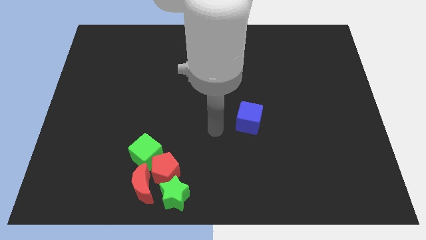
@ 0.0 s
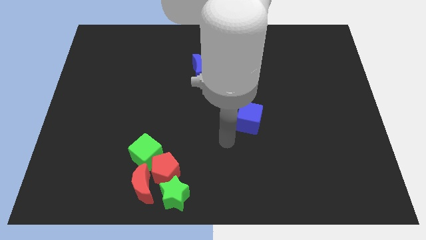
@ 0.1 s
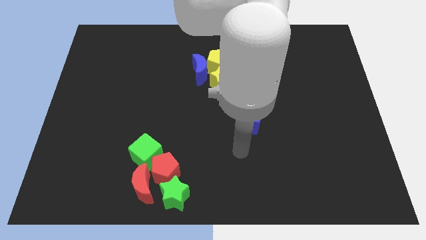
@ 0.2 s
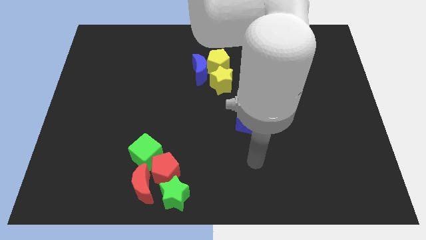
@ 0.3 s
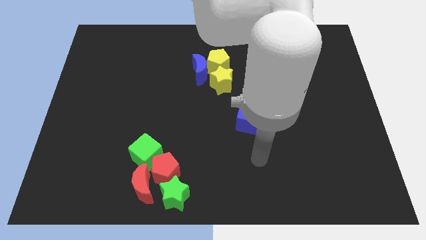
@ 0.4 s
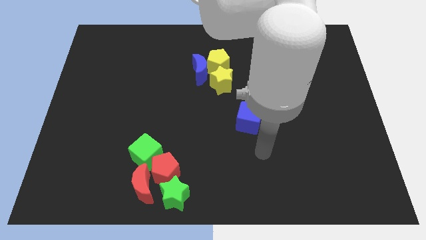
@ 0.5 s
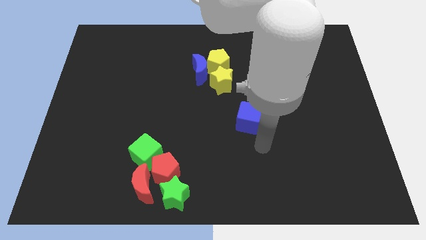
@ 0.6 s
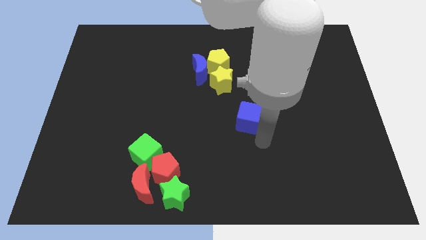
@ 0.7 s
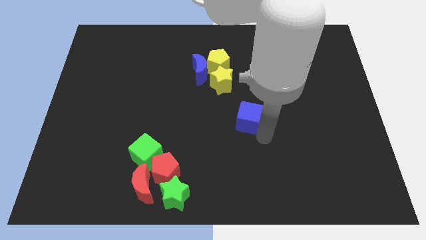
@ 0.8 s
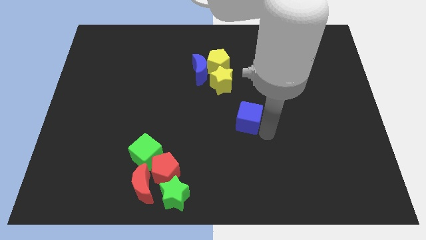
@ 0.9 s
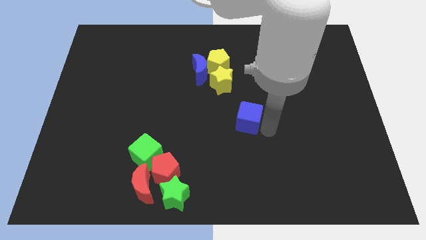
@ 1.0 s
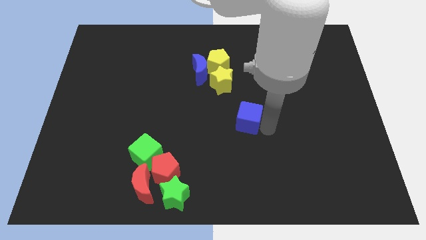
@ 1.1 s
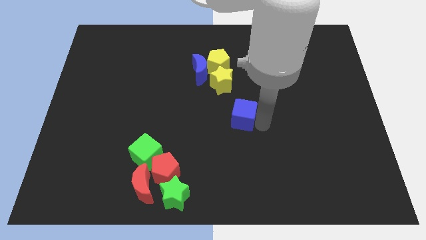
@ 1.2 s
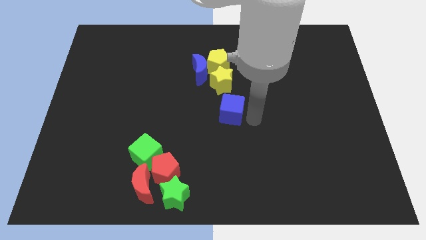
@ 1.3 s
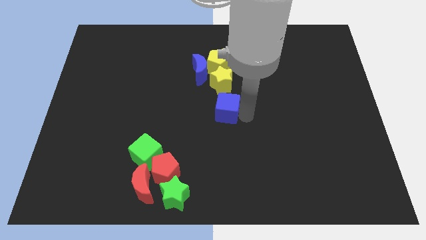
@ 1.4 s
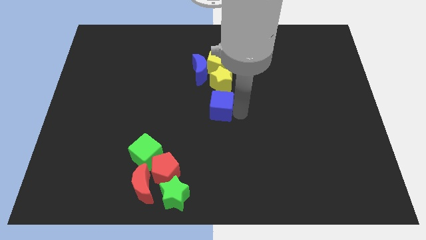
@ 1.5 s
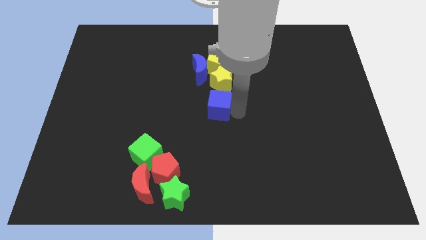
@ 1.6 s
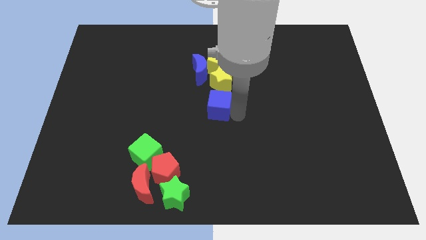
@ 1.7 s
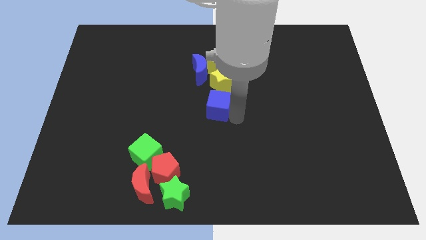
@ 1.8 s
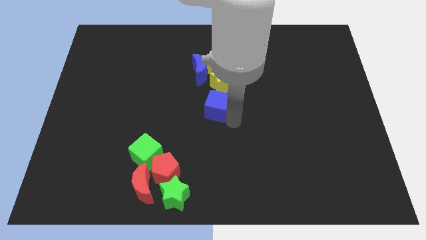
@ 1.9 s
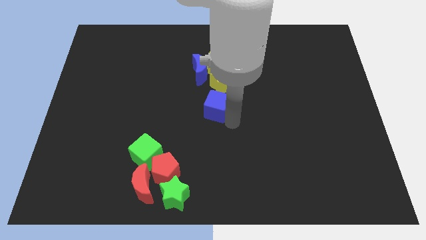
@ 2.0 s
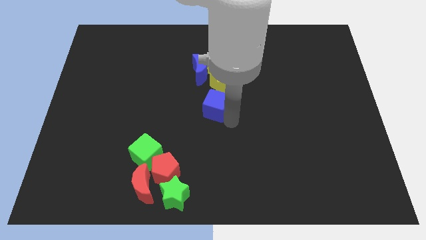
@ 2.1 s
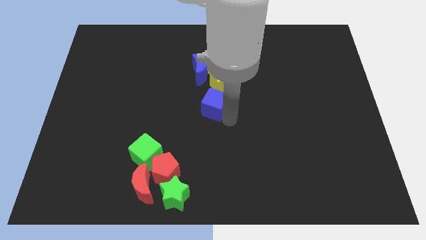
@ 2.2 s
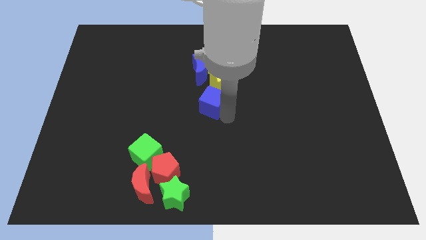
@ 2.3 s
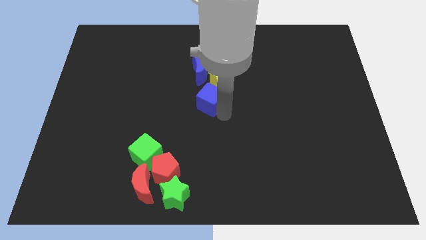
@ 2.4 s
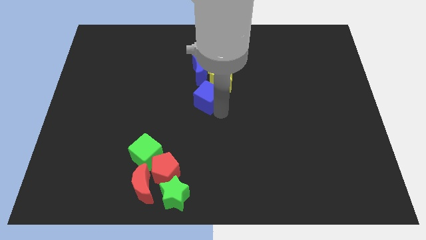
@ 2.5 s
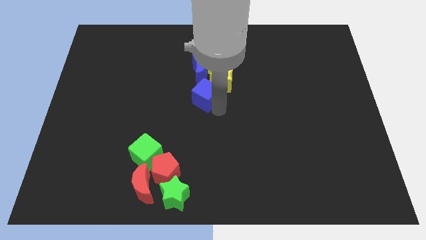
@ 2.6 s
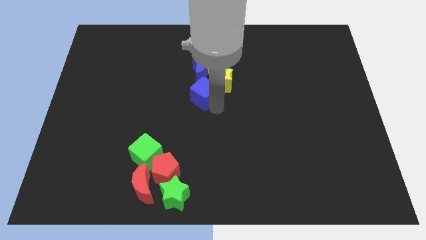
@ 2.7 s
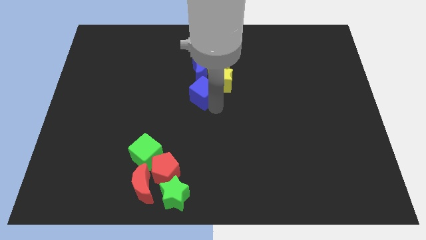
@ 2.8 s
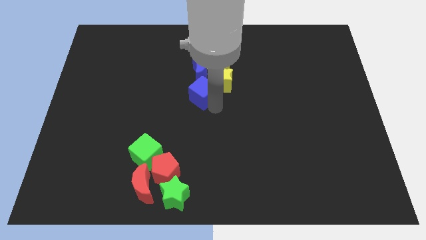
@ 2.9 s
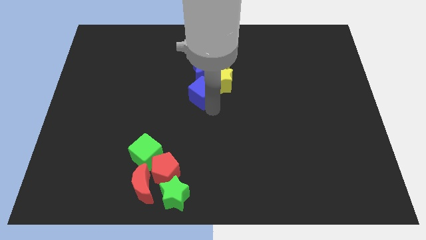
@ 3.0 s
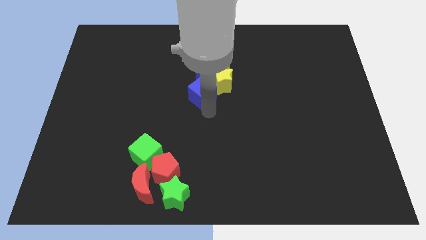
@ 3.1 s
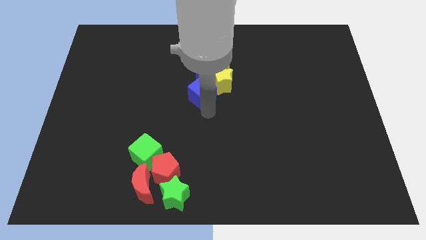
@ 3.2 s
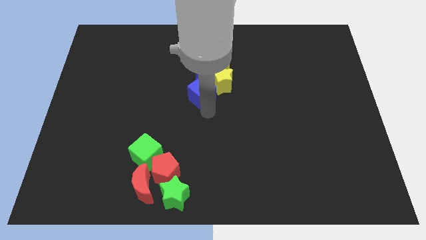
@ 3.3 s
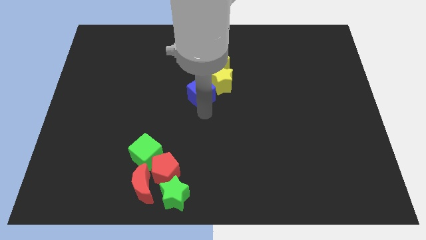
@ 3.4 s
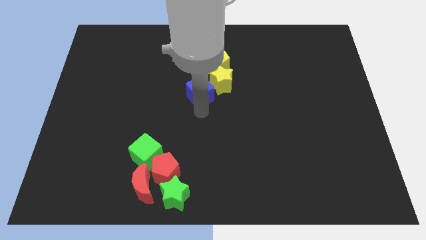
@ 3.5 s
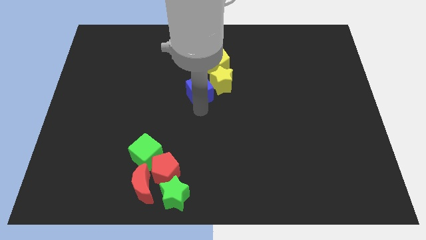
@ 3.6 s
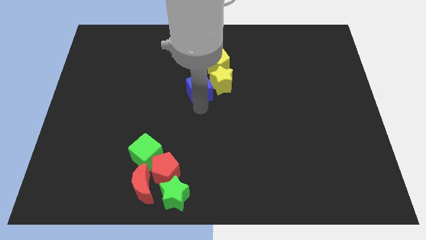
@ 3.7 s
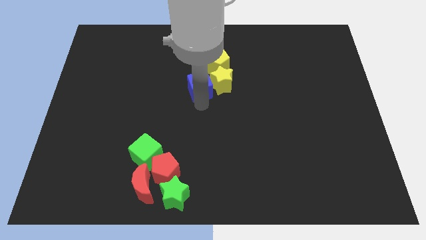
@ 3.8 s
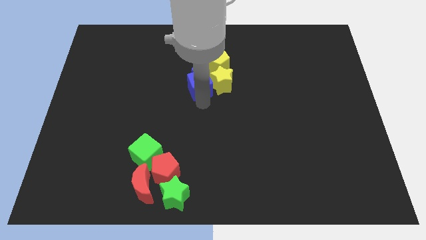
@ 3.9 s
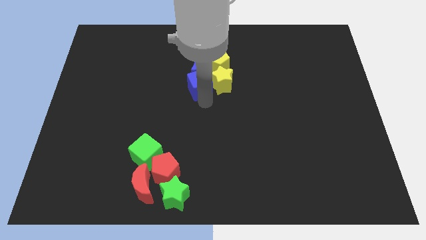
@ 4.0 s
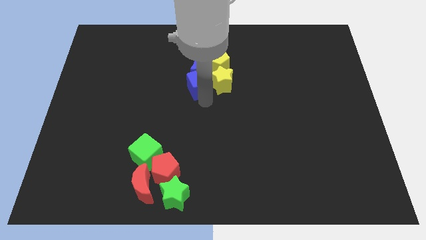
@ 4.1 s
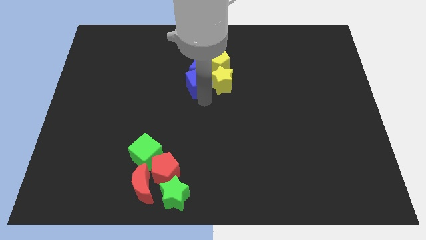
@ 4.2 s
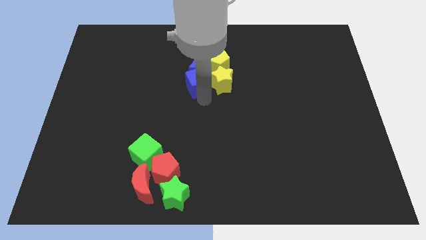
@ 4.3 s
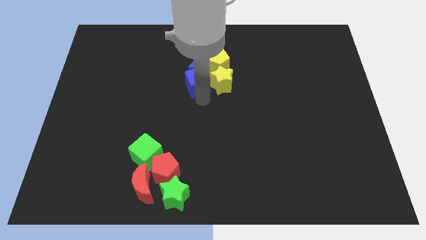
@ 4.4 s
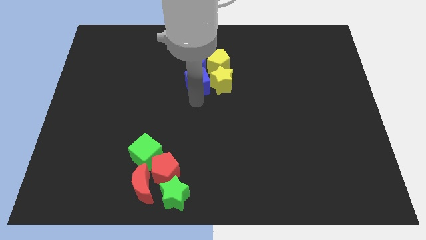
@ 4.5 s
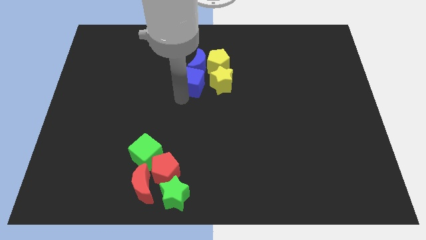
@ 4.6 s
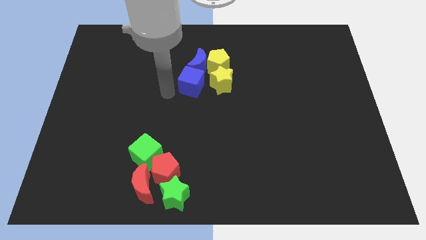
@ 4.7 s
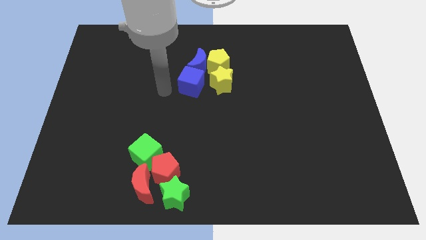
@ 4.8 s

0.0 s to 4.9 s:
push the blue cube to the left side of the yellow star

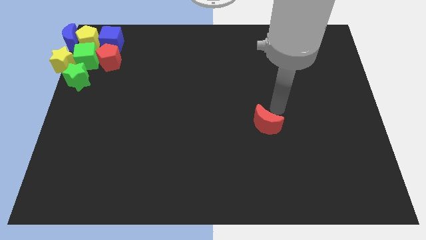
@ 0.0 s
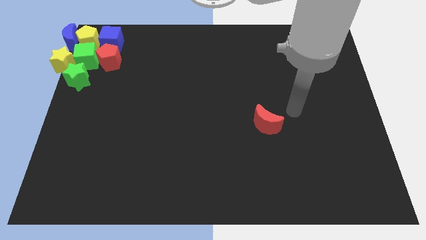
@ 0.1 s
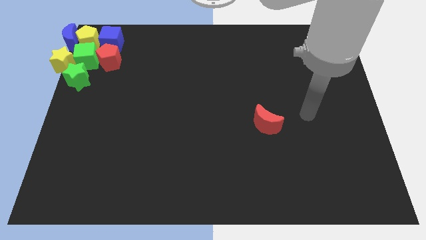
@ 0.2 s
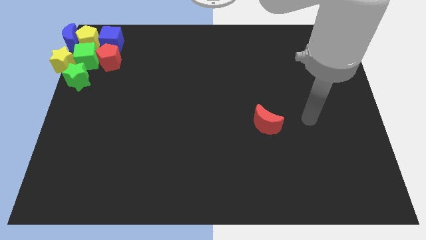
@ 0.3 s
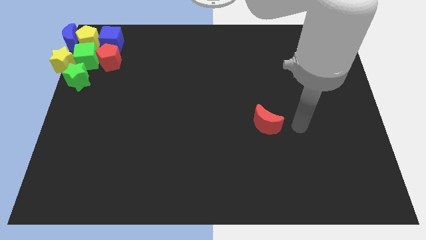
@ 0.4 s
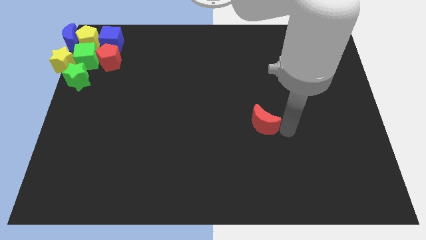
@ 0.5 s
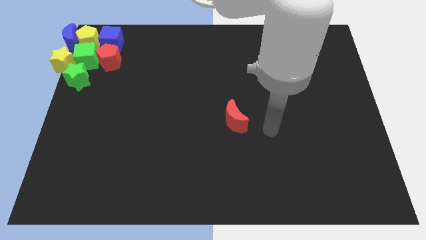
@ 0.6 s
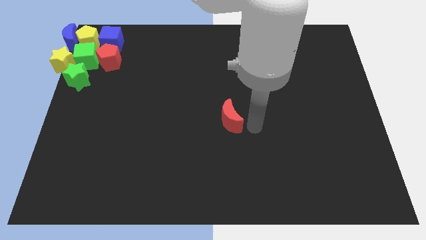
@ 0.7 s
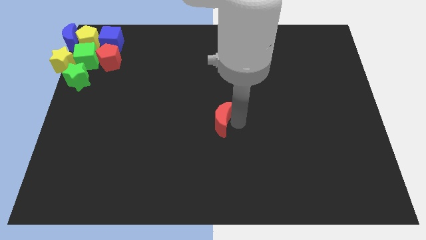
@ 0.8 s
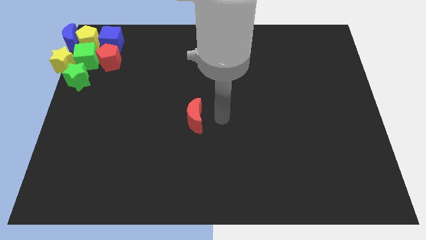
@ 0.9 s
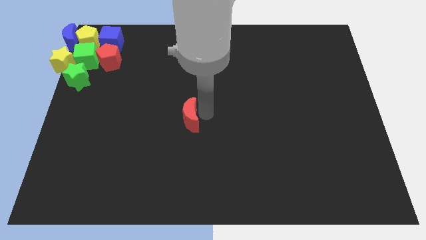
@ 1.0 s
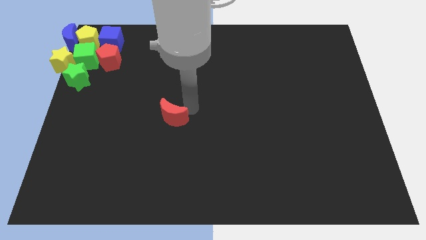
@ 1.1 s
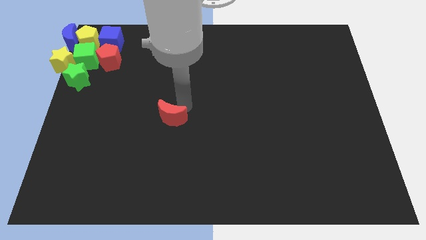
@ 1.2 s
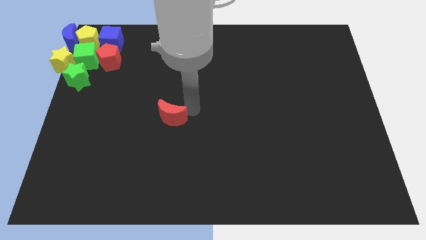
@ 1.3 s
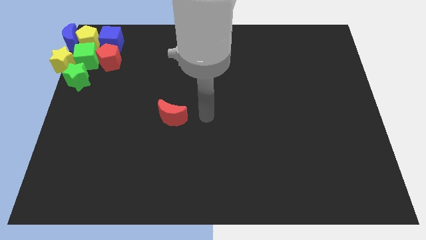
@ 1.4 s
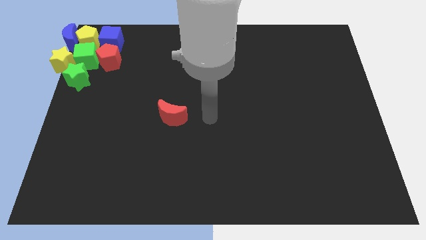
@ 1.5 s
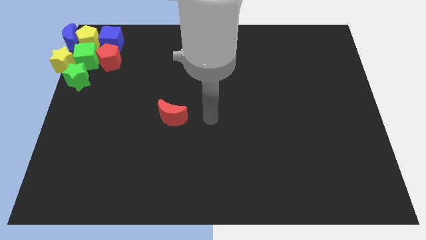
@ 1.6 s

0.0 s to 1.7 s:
move the red moon towards the left side

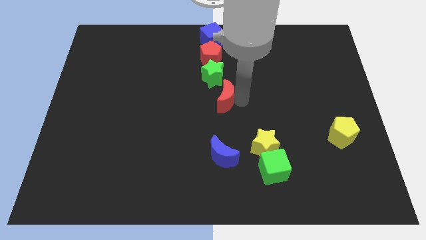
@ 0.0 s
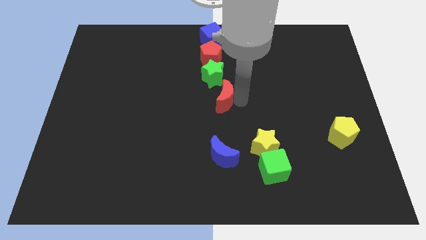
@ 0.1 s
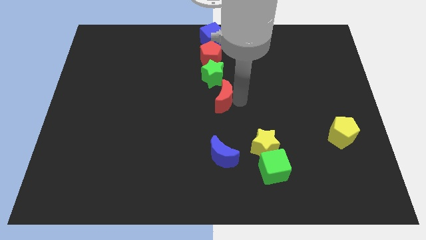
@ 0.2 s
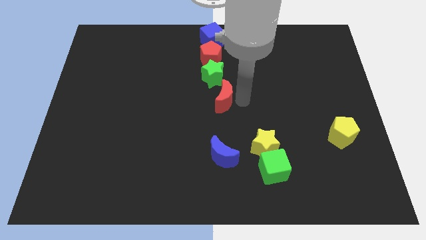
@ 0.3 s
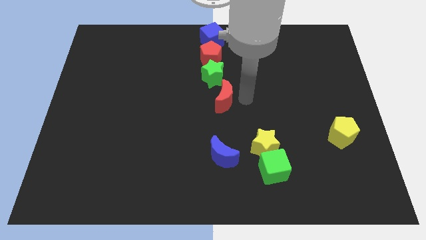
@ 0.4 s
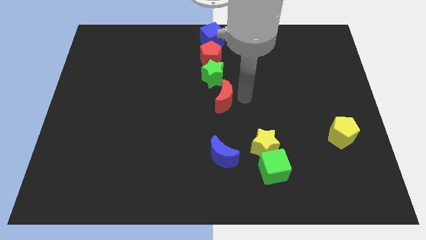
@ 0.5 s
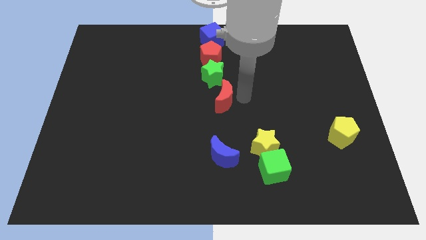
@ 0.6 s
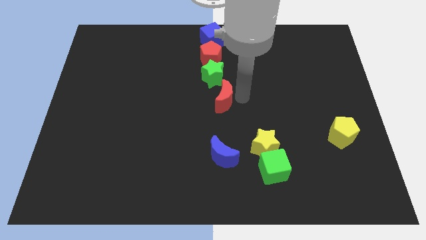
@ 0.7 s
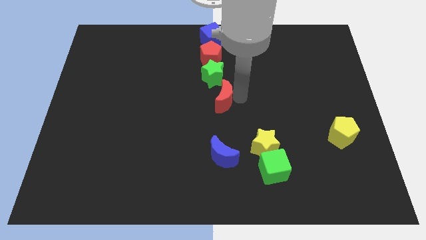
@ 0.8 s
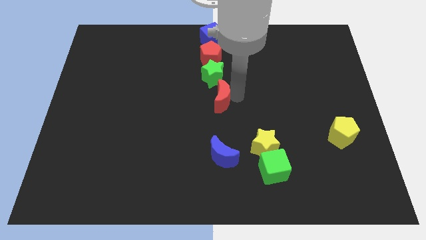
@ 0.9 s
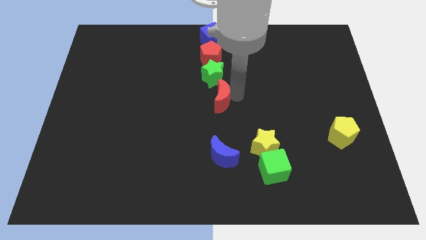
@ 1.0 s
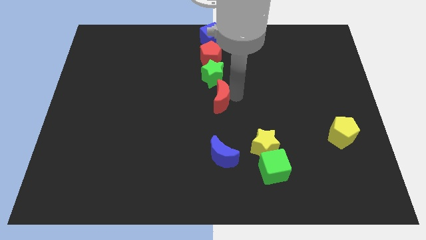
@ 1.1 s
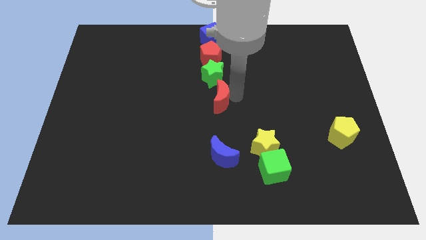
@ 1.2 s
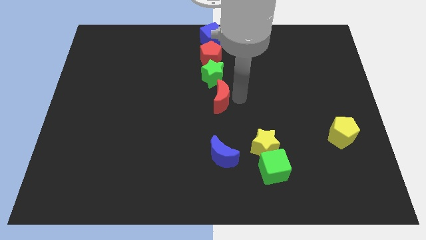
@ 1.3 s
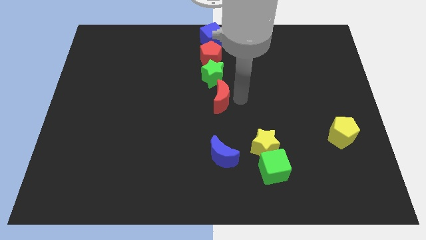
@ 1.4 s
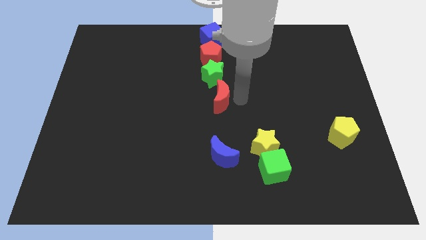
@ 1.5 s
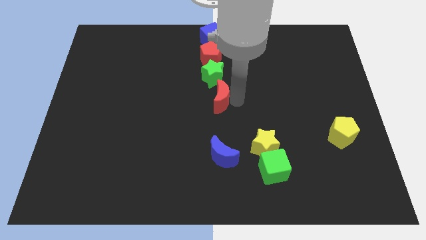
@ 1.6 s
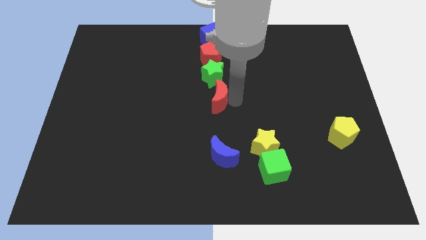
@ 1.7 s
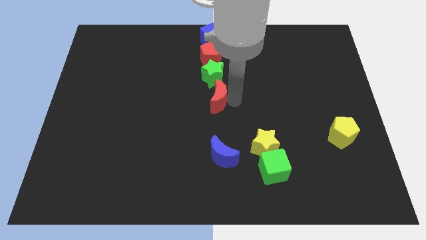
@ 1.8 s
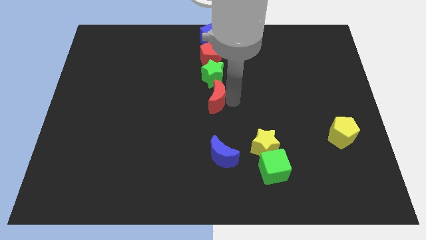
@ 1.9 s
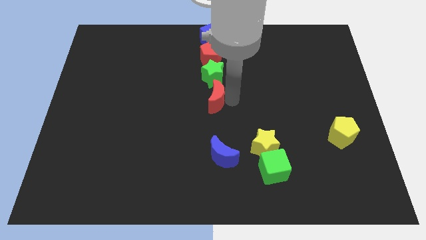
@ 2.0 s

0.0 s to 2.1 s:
move the red crescent to the bottom of the green star

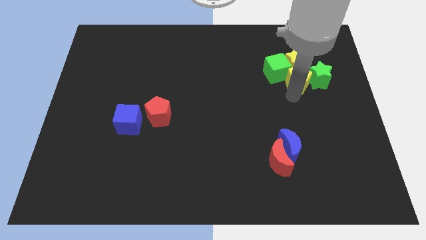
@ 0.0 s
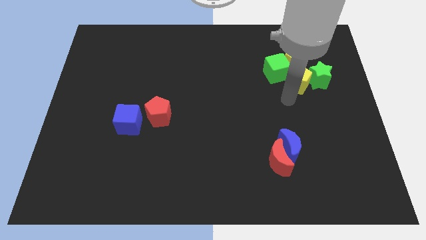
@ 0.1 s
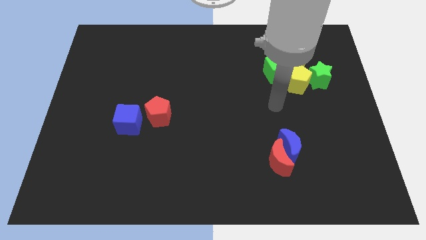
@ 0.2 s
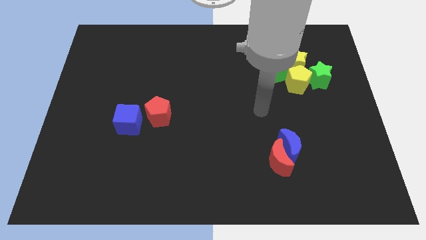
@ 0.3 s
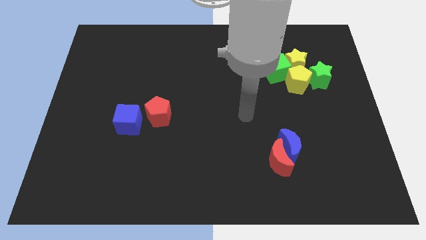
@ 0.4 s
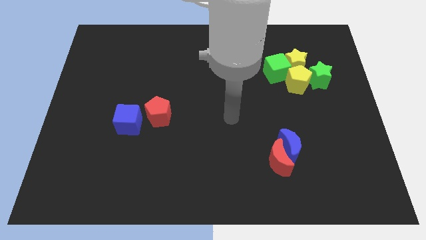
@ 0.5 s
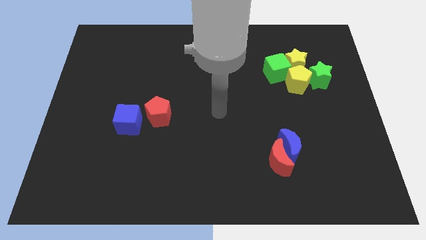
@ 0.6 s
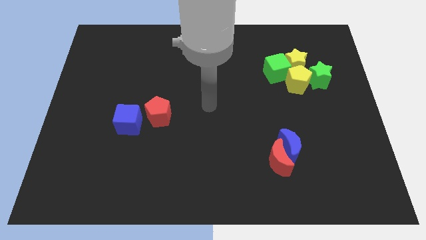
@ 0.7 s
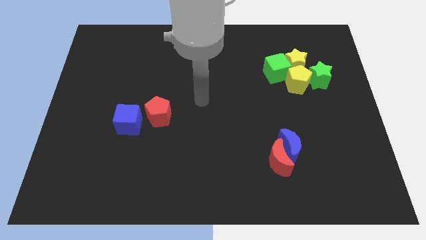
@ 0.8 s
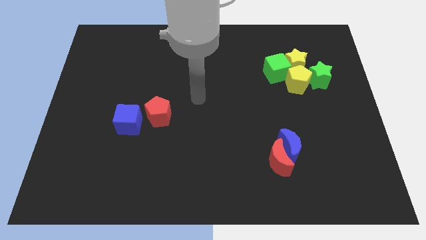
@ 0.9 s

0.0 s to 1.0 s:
move yourself away from the bottom side of the yellow pentagon
